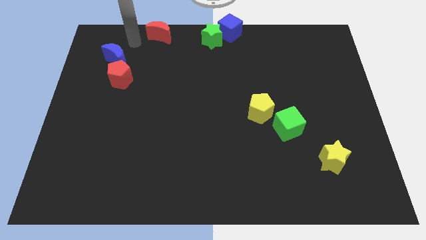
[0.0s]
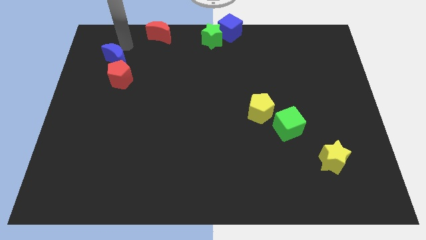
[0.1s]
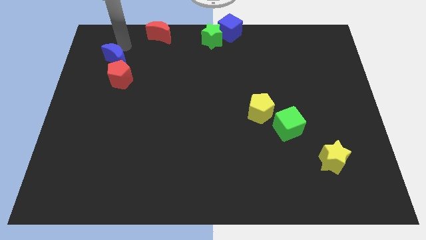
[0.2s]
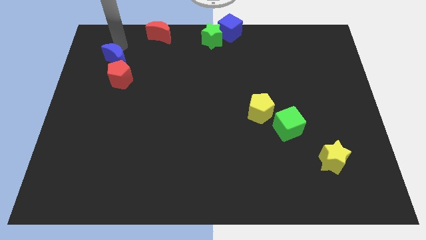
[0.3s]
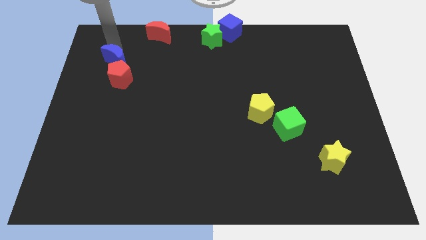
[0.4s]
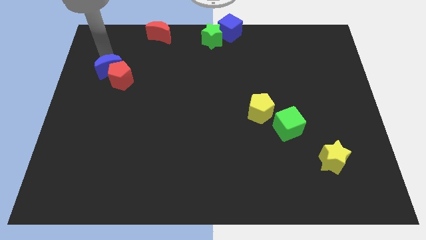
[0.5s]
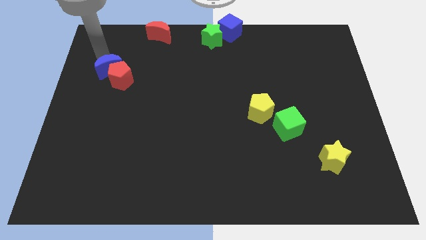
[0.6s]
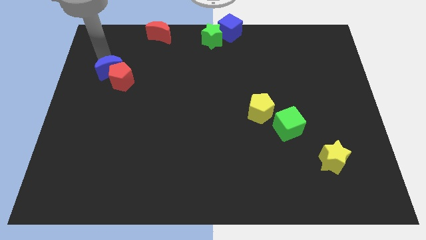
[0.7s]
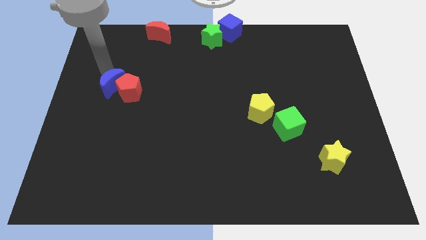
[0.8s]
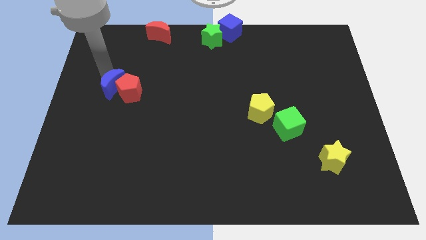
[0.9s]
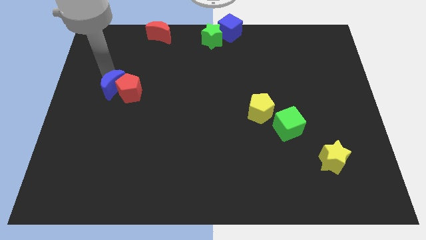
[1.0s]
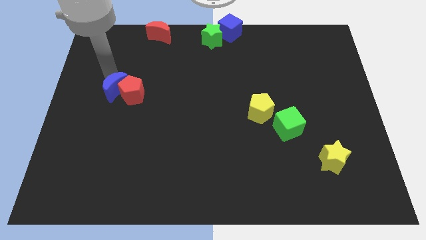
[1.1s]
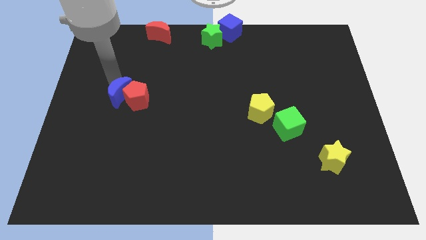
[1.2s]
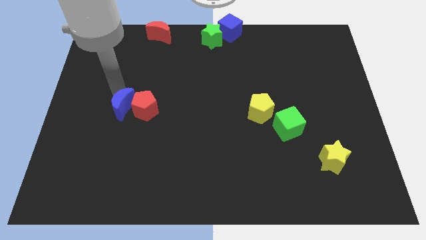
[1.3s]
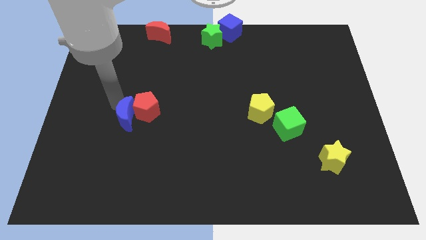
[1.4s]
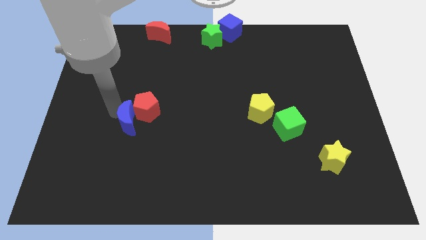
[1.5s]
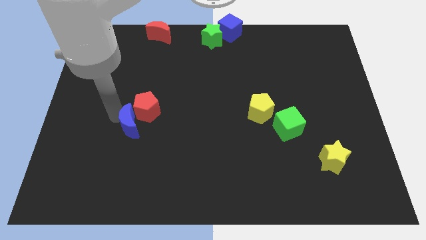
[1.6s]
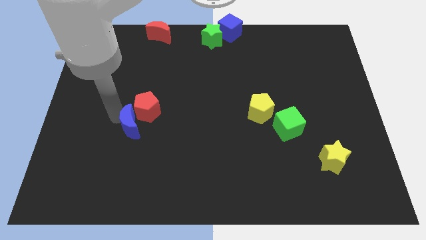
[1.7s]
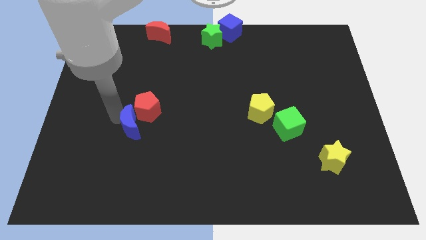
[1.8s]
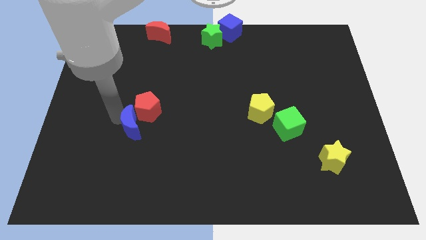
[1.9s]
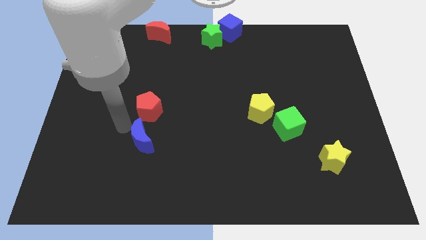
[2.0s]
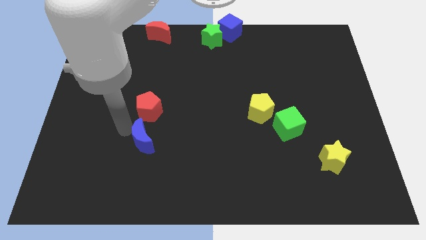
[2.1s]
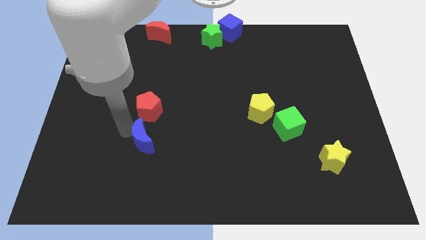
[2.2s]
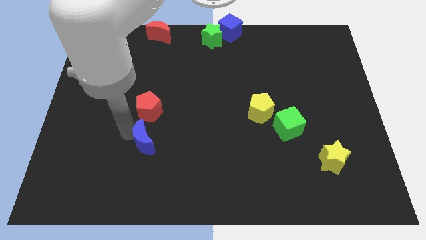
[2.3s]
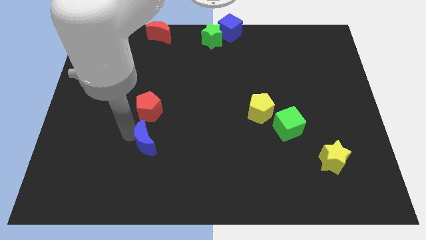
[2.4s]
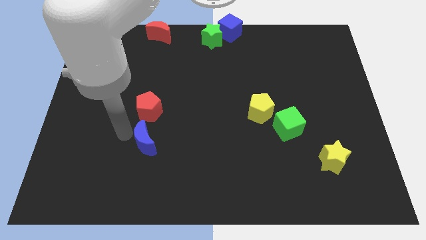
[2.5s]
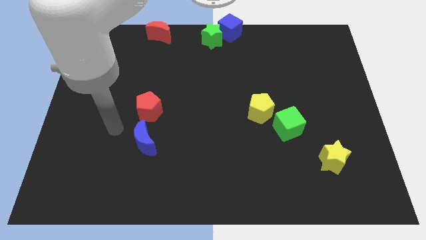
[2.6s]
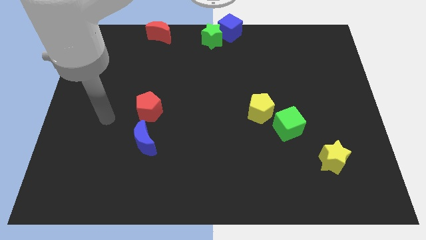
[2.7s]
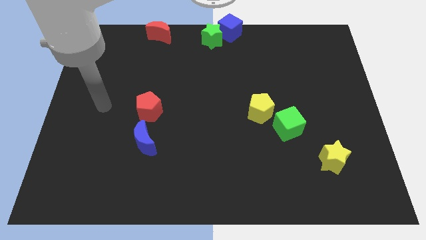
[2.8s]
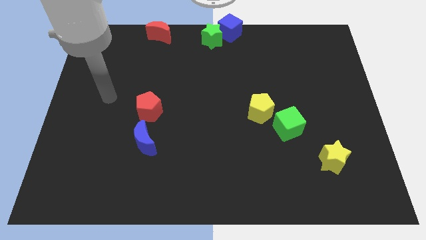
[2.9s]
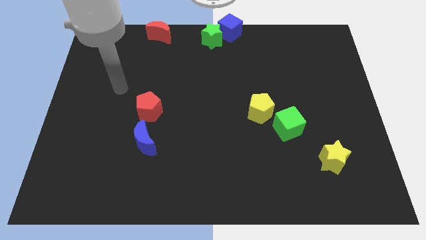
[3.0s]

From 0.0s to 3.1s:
move red pentagon blue moon to the center
